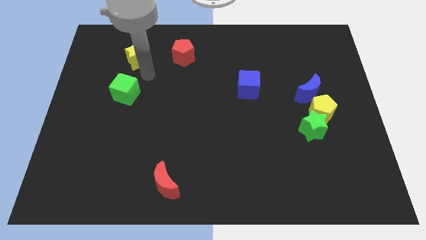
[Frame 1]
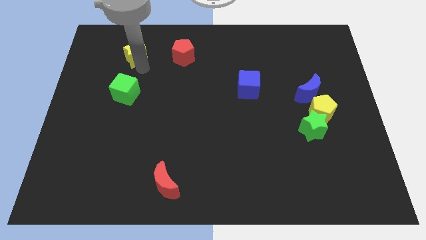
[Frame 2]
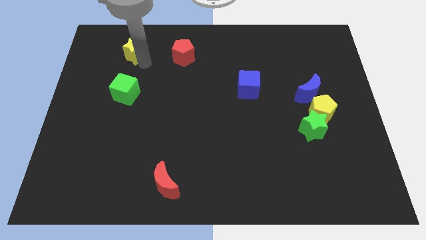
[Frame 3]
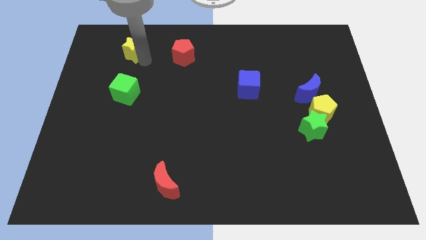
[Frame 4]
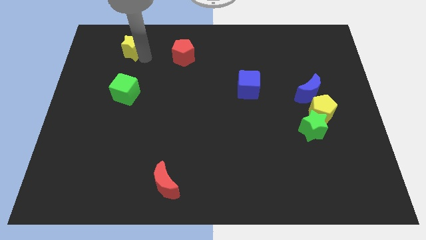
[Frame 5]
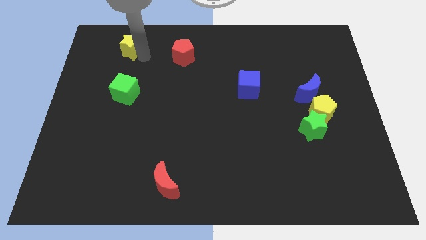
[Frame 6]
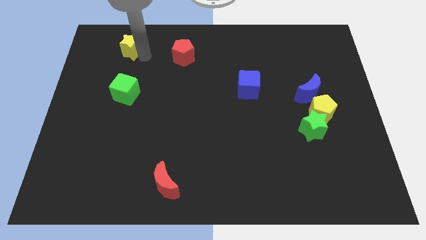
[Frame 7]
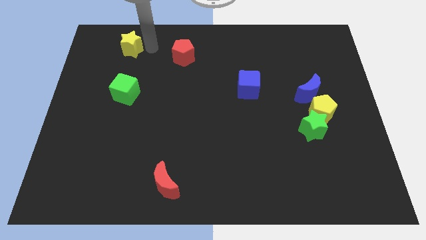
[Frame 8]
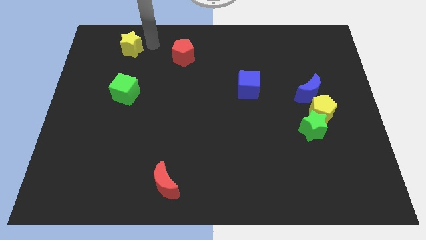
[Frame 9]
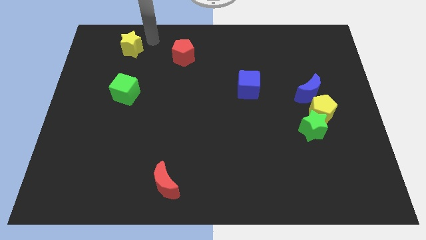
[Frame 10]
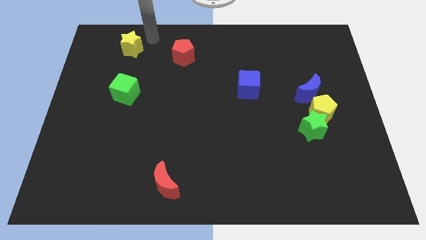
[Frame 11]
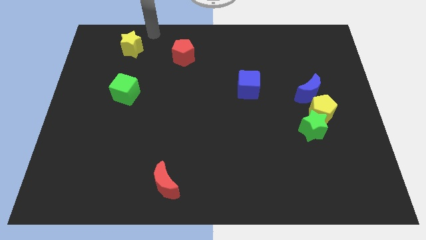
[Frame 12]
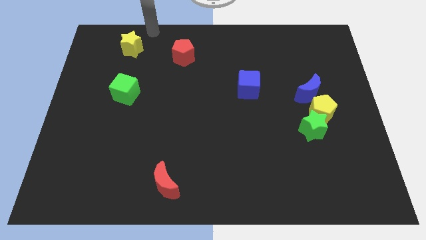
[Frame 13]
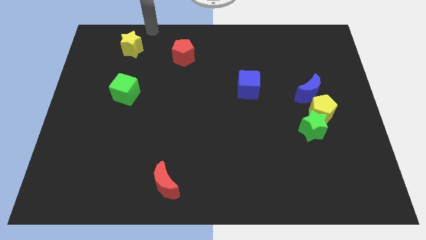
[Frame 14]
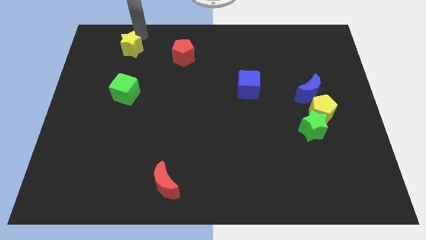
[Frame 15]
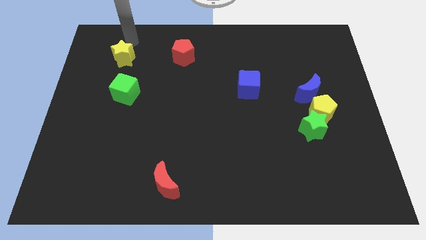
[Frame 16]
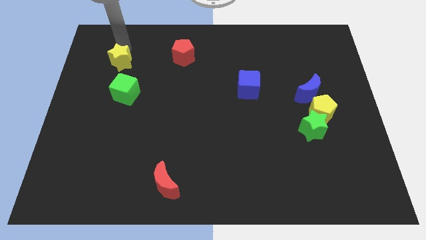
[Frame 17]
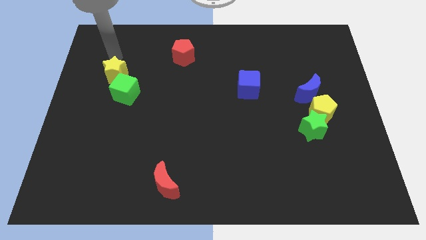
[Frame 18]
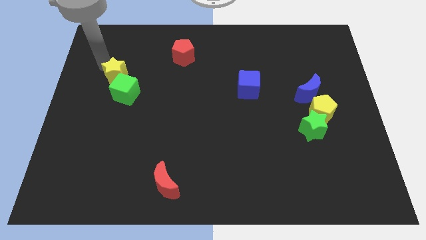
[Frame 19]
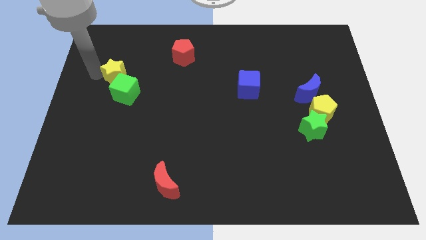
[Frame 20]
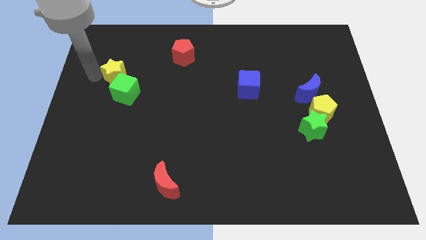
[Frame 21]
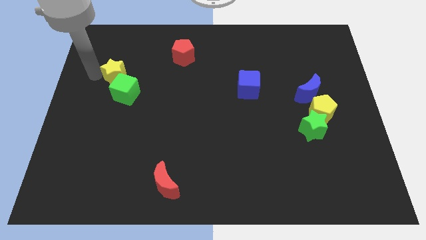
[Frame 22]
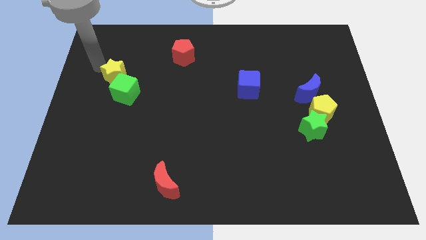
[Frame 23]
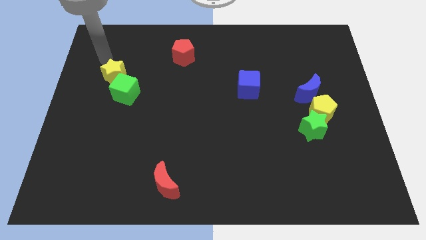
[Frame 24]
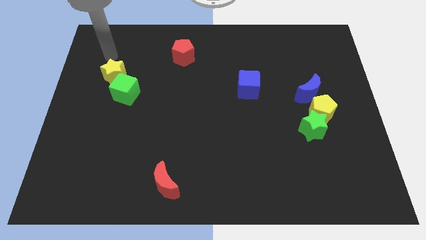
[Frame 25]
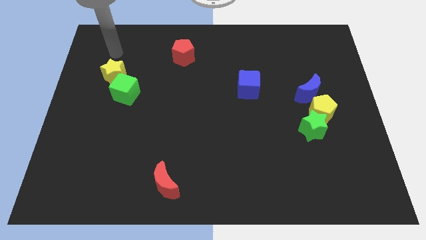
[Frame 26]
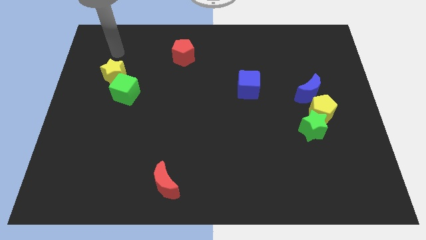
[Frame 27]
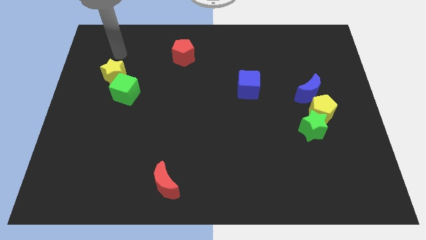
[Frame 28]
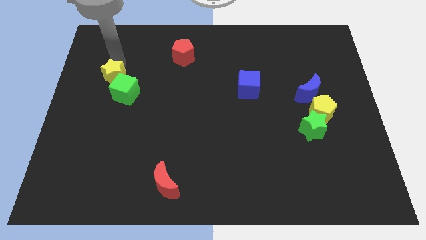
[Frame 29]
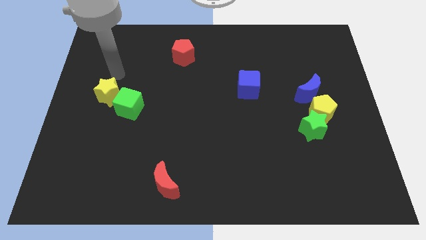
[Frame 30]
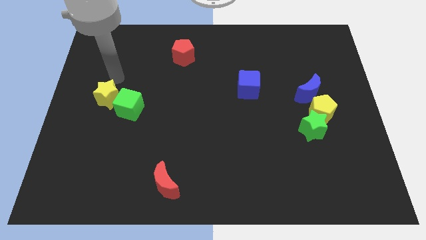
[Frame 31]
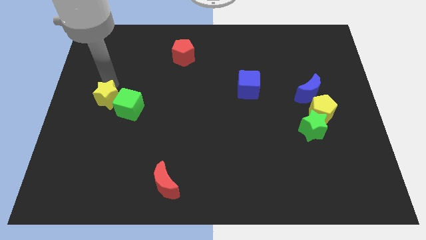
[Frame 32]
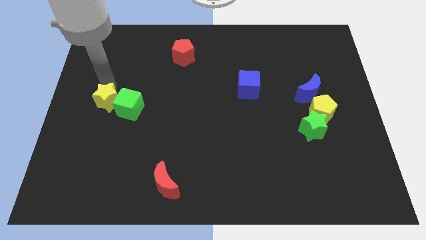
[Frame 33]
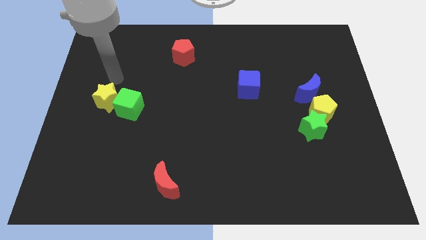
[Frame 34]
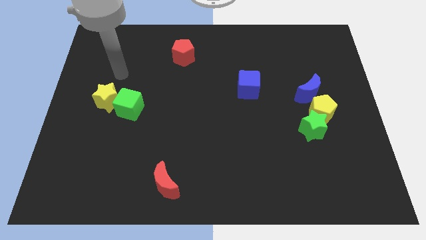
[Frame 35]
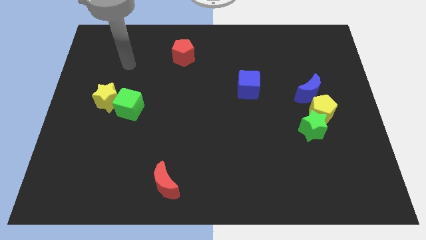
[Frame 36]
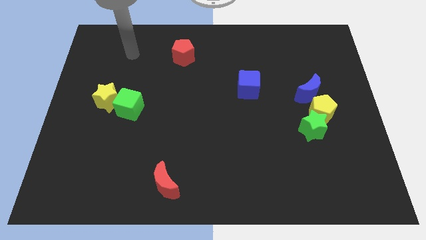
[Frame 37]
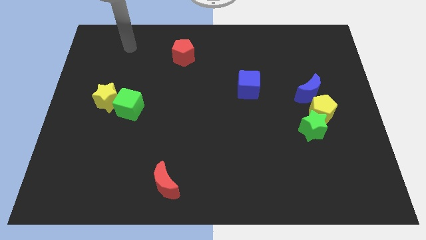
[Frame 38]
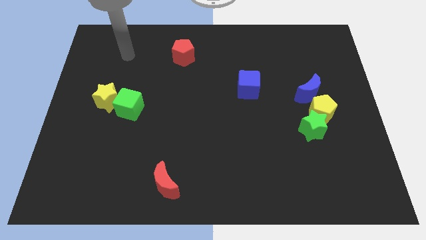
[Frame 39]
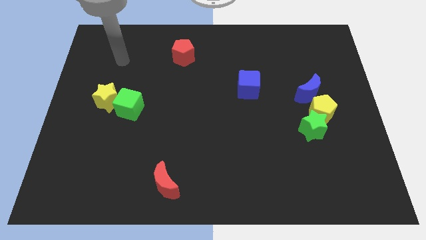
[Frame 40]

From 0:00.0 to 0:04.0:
push the yellow star into the green cube

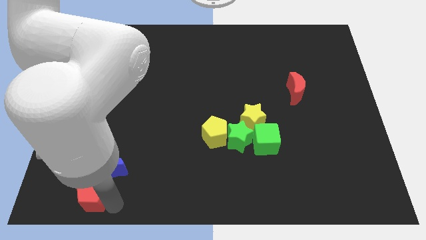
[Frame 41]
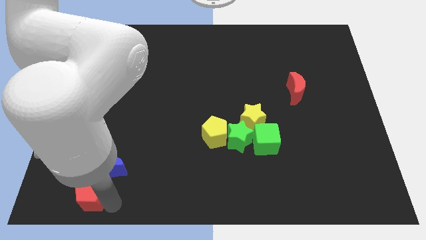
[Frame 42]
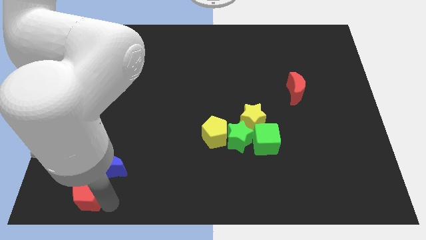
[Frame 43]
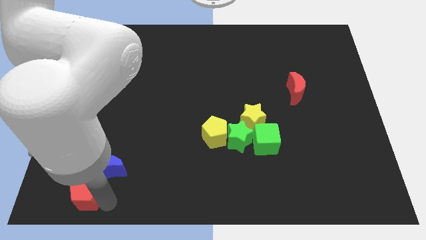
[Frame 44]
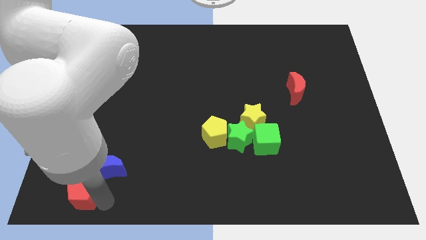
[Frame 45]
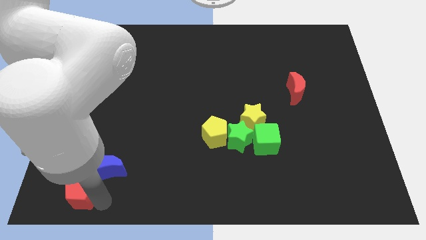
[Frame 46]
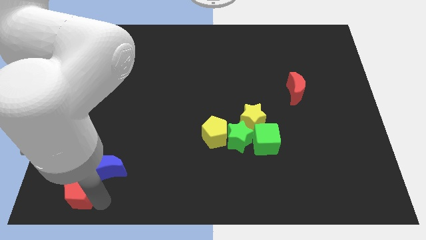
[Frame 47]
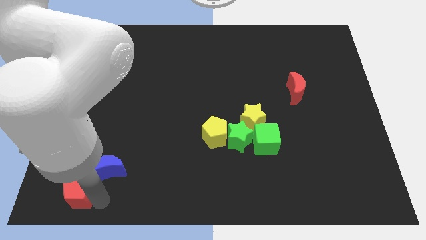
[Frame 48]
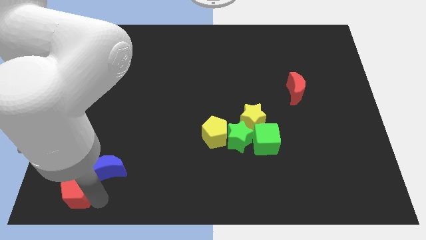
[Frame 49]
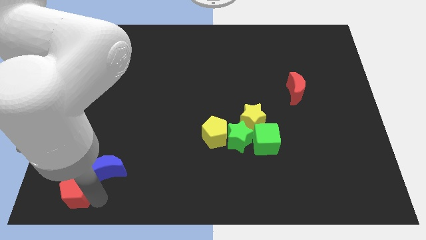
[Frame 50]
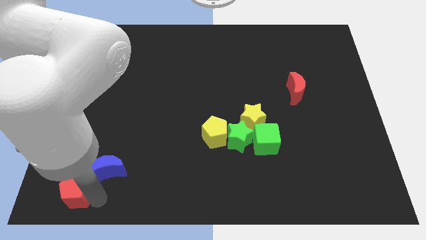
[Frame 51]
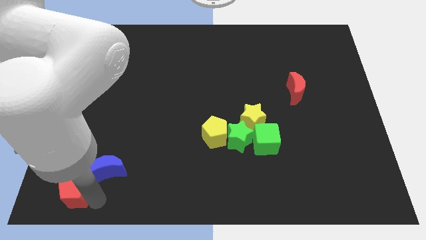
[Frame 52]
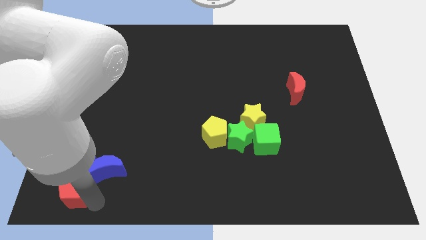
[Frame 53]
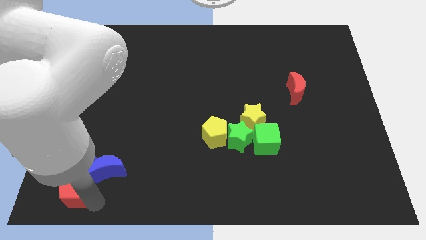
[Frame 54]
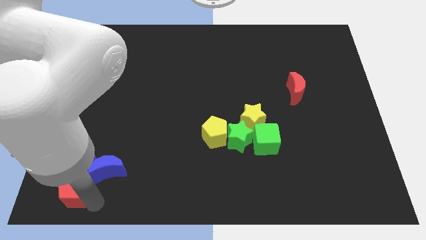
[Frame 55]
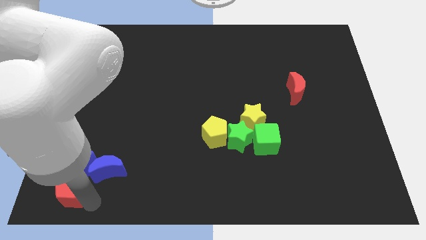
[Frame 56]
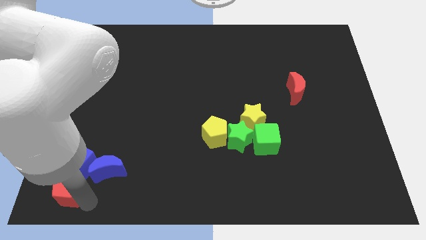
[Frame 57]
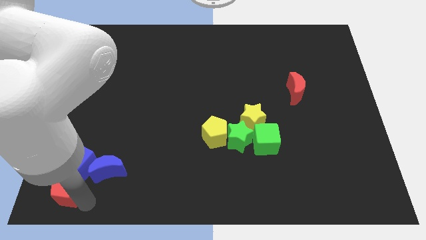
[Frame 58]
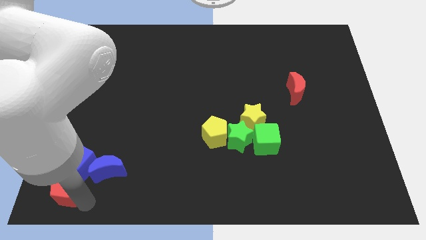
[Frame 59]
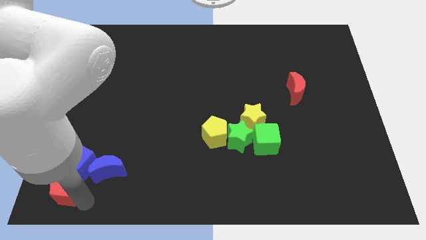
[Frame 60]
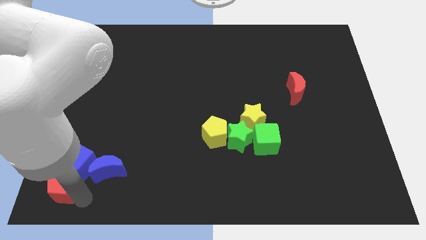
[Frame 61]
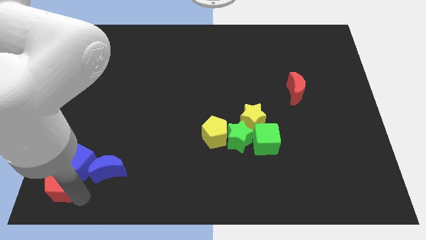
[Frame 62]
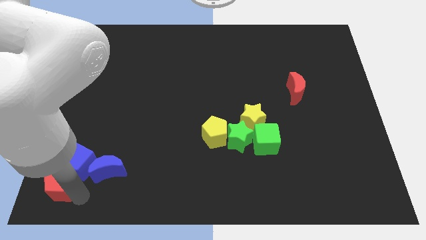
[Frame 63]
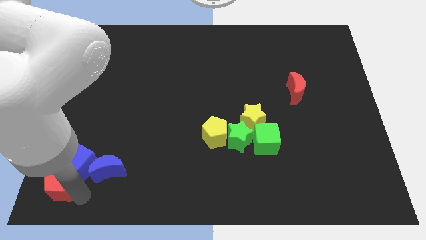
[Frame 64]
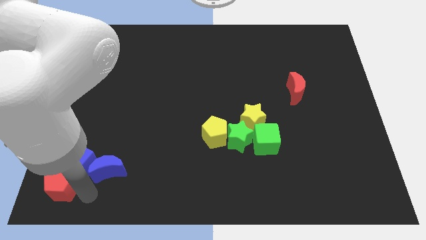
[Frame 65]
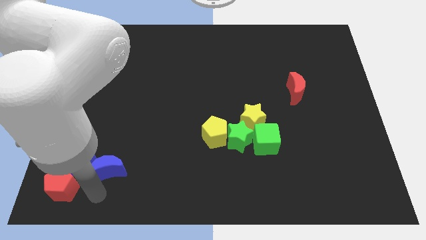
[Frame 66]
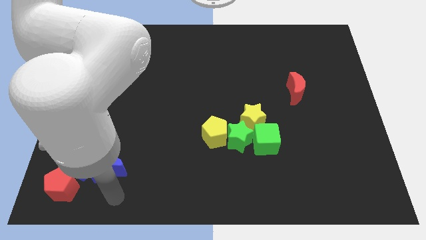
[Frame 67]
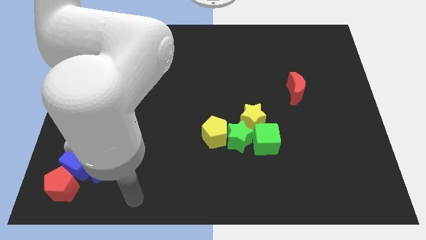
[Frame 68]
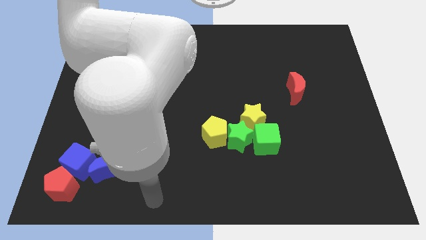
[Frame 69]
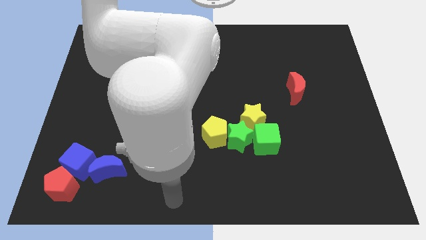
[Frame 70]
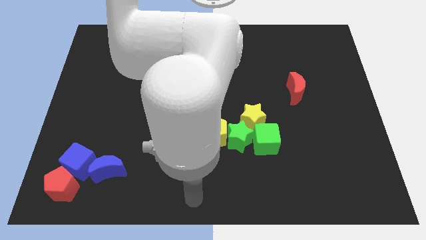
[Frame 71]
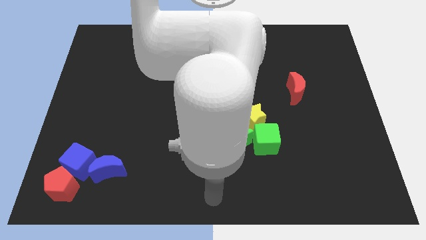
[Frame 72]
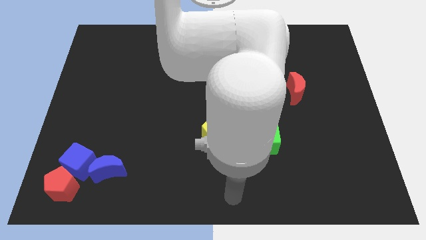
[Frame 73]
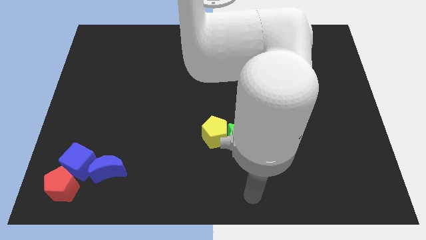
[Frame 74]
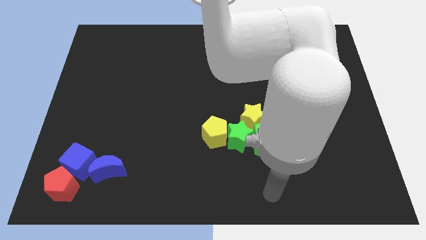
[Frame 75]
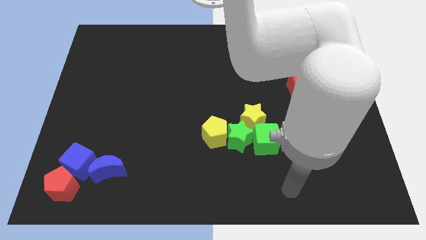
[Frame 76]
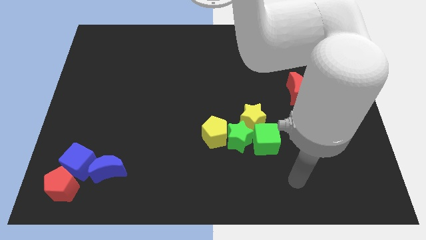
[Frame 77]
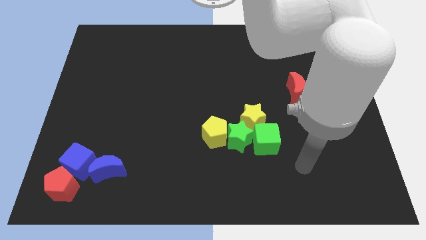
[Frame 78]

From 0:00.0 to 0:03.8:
slightly push the red pentagon to the left

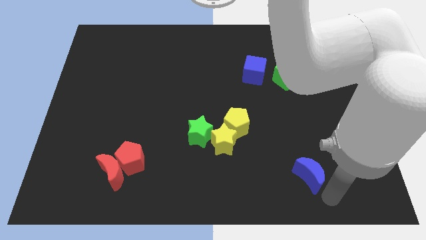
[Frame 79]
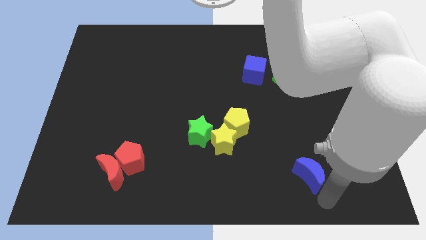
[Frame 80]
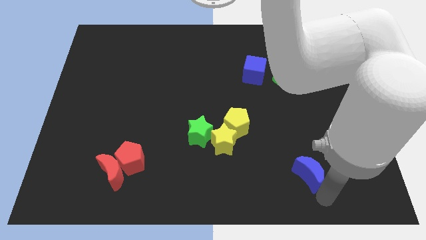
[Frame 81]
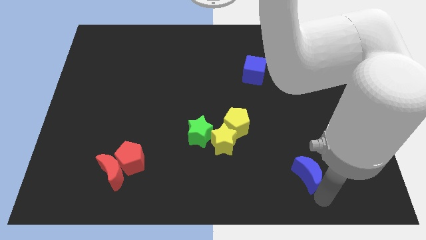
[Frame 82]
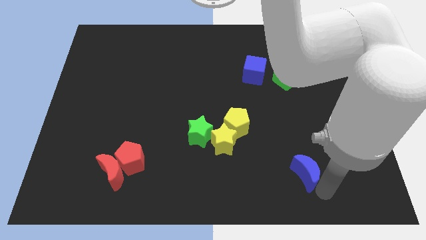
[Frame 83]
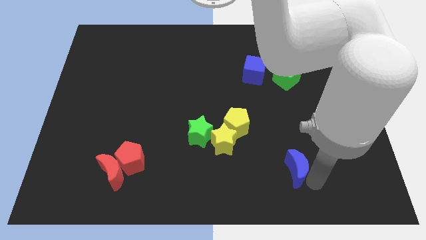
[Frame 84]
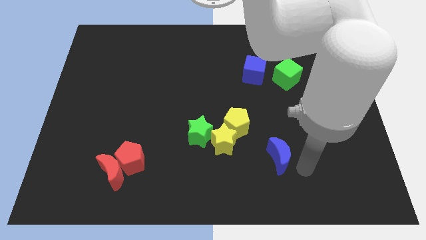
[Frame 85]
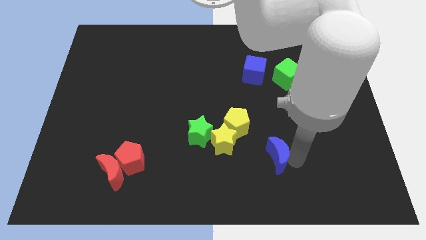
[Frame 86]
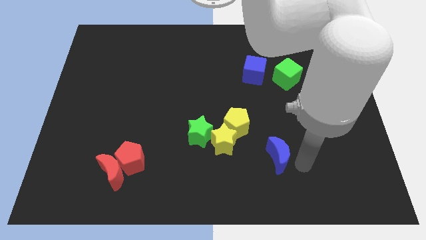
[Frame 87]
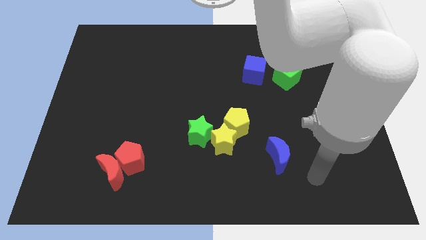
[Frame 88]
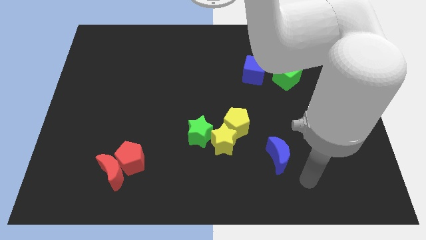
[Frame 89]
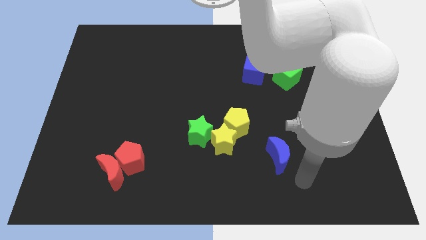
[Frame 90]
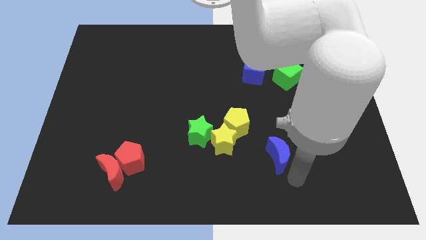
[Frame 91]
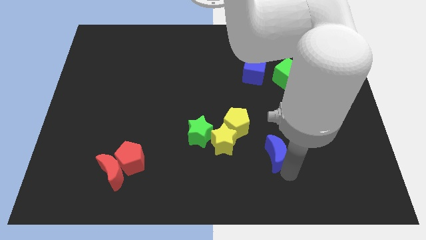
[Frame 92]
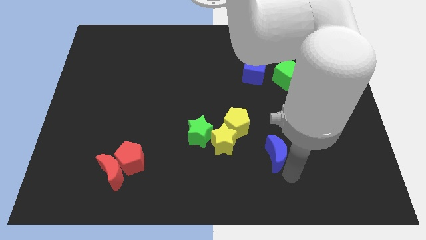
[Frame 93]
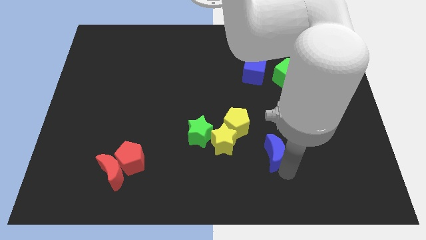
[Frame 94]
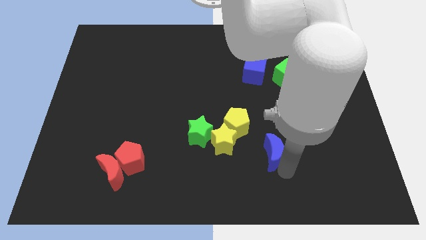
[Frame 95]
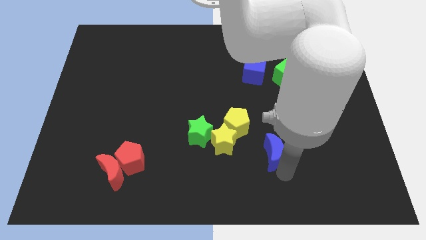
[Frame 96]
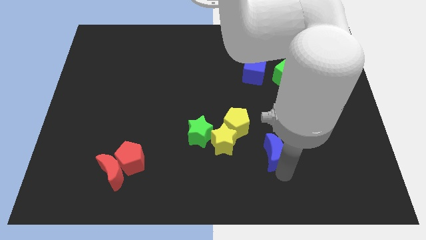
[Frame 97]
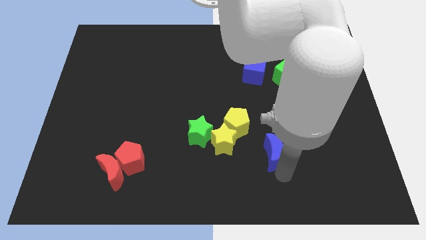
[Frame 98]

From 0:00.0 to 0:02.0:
push the blue crescent towards right to the yellow star
